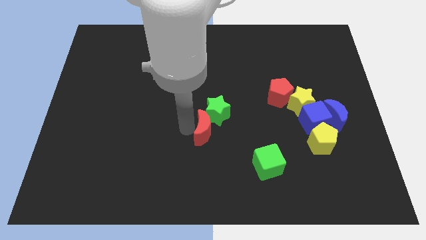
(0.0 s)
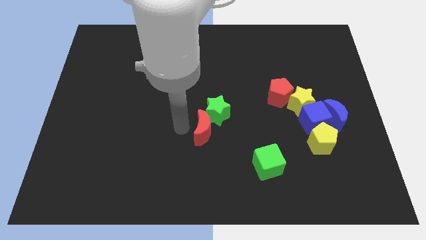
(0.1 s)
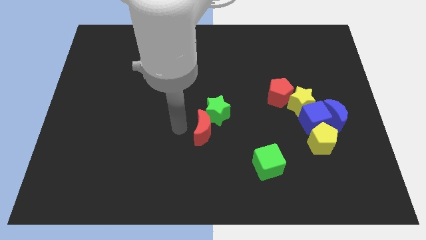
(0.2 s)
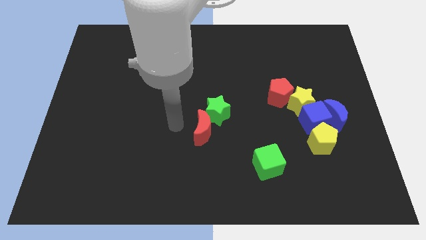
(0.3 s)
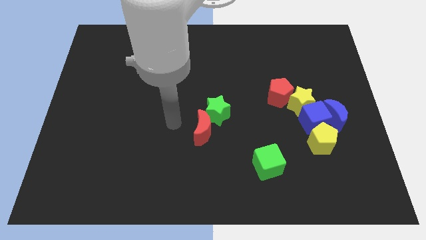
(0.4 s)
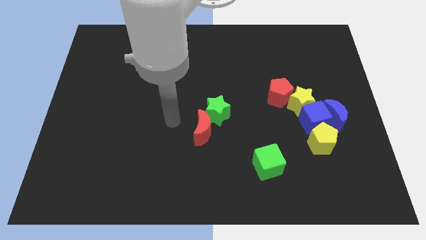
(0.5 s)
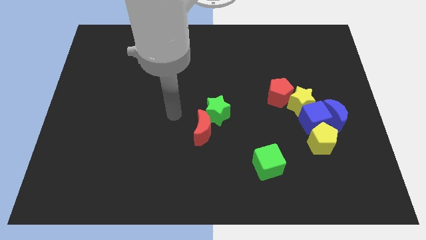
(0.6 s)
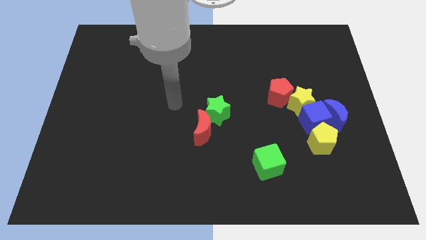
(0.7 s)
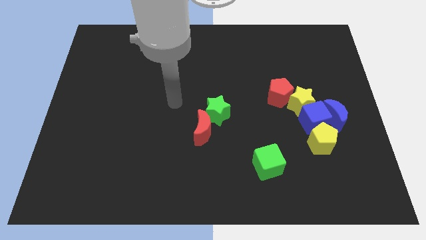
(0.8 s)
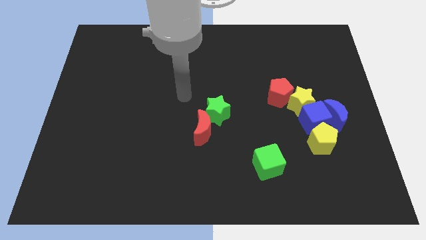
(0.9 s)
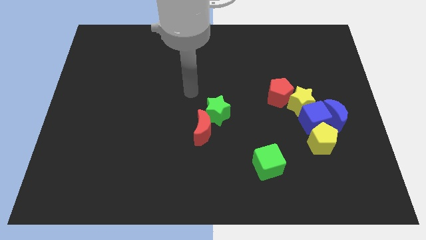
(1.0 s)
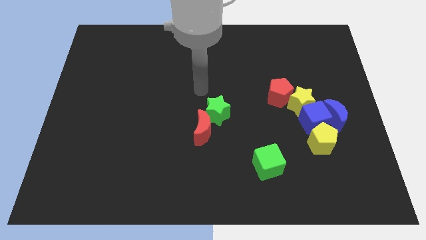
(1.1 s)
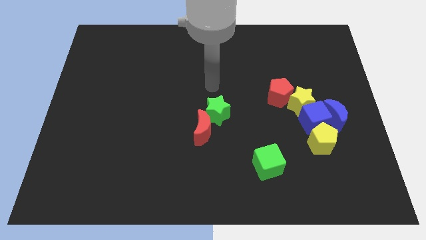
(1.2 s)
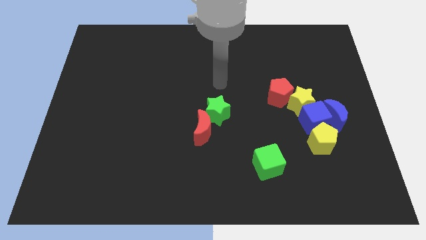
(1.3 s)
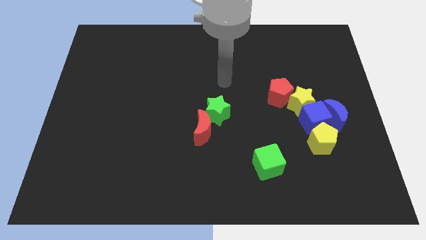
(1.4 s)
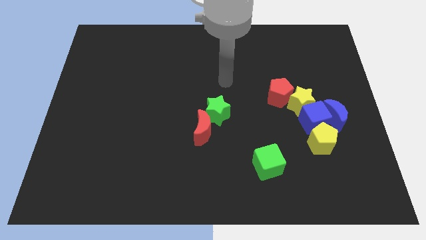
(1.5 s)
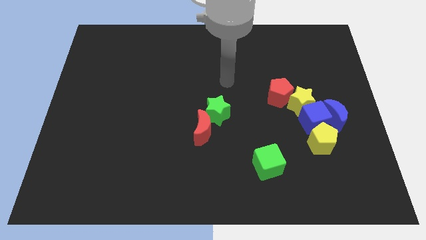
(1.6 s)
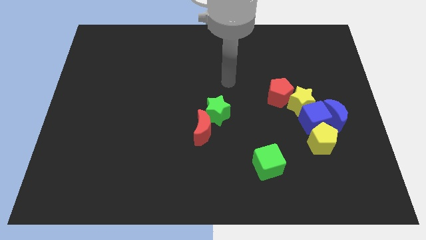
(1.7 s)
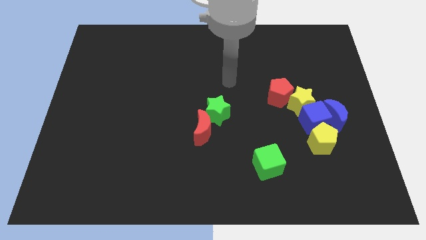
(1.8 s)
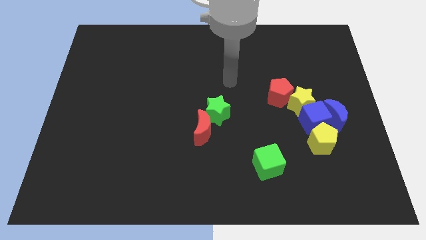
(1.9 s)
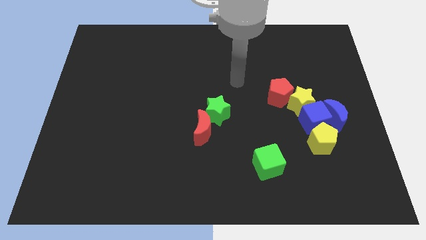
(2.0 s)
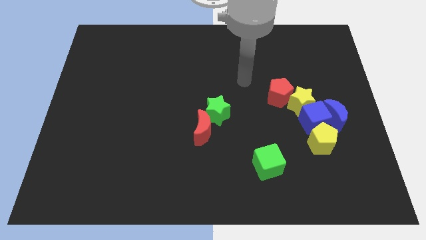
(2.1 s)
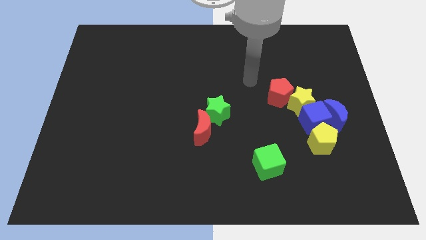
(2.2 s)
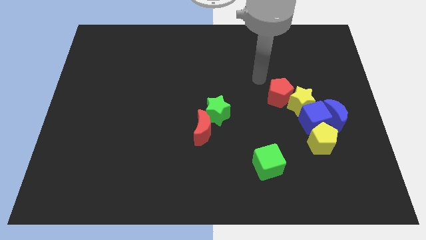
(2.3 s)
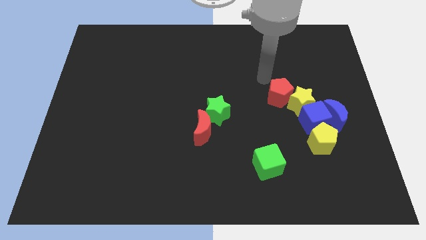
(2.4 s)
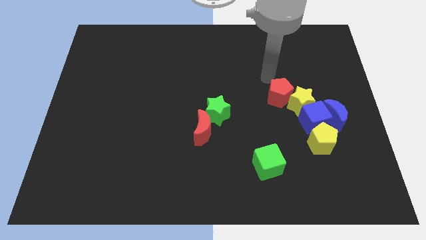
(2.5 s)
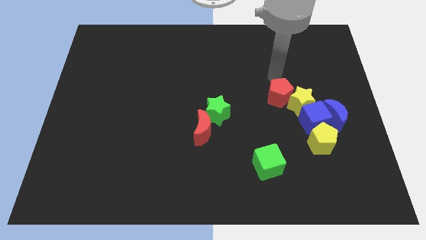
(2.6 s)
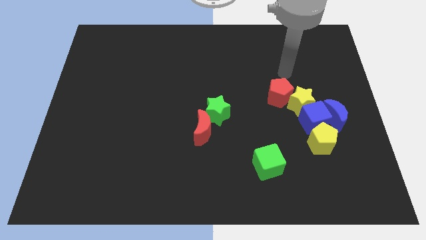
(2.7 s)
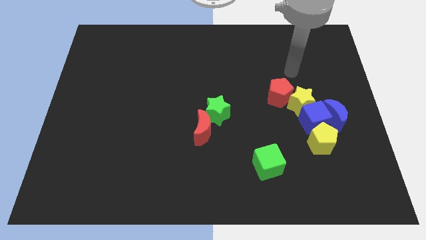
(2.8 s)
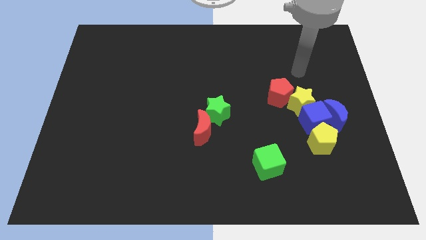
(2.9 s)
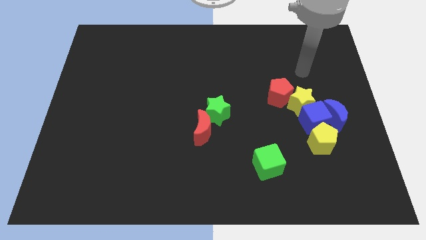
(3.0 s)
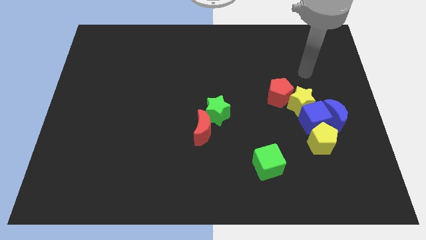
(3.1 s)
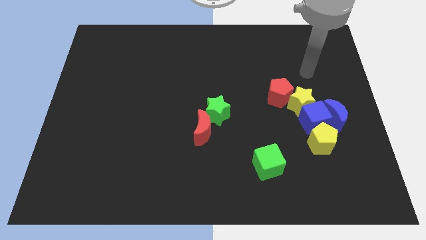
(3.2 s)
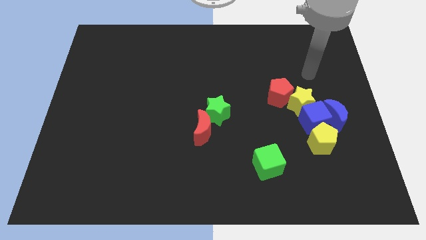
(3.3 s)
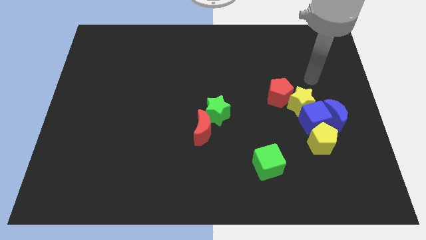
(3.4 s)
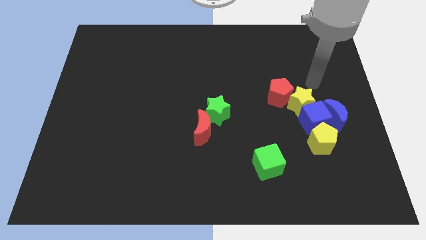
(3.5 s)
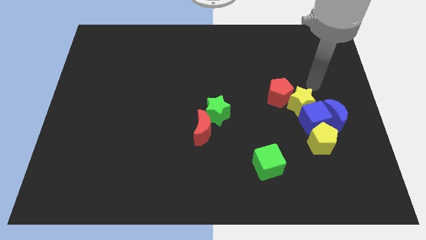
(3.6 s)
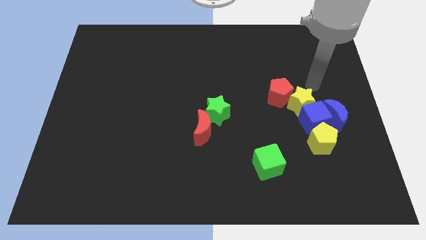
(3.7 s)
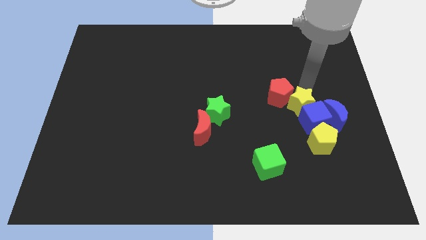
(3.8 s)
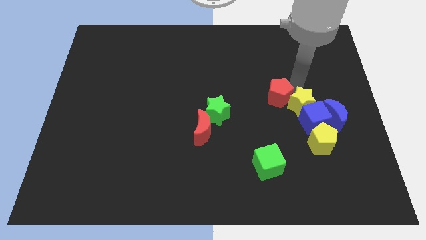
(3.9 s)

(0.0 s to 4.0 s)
point your arm above the yellow star

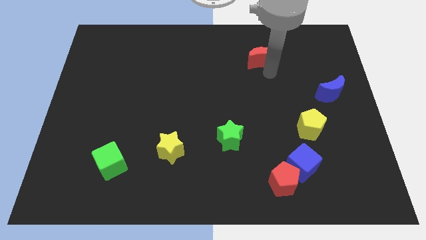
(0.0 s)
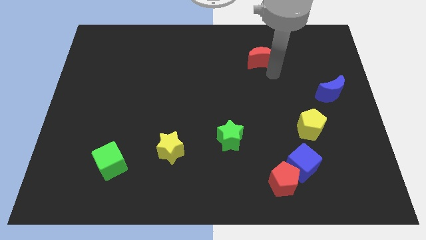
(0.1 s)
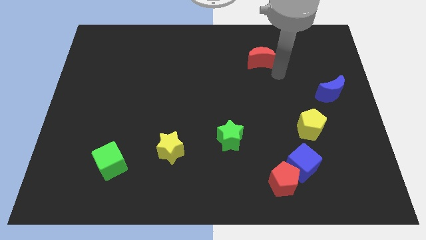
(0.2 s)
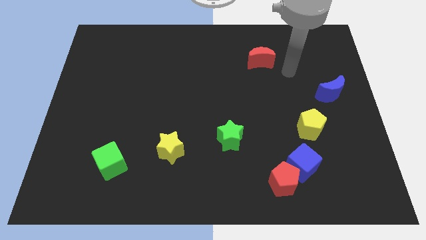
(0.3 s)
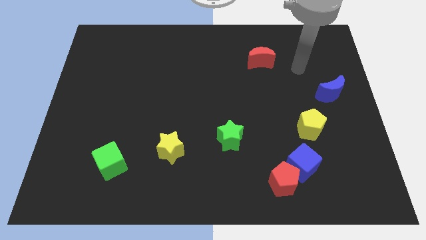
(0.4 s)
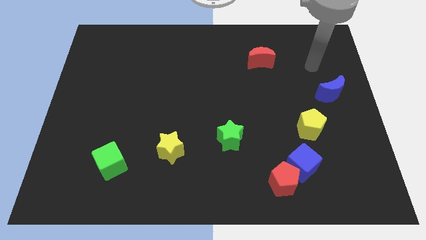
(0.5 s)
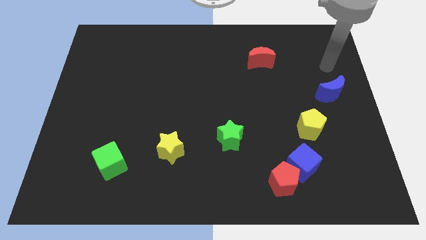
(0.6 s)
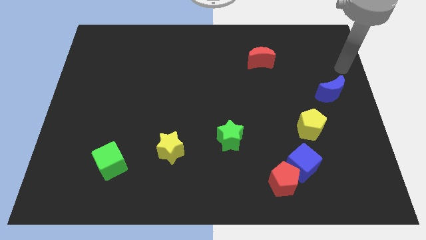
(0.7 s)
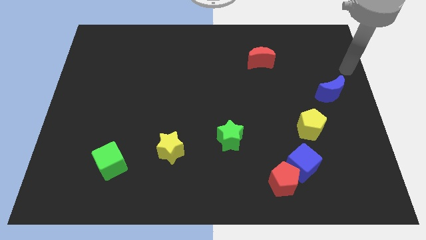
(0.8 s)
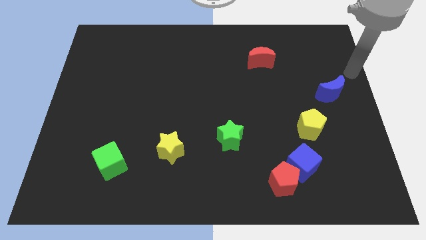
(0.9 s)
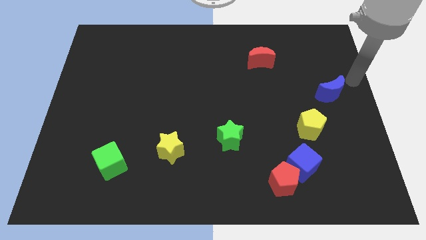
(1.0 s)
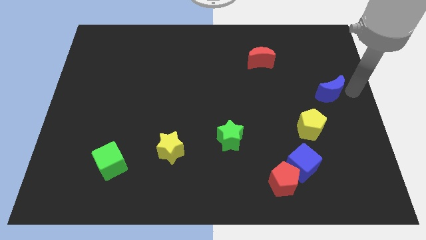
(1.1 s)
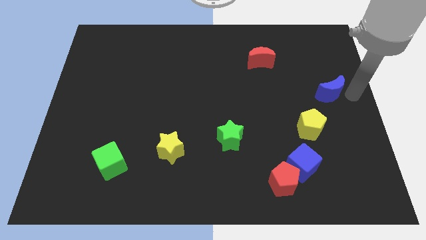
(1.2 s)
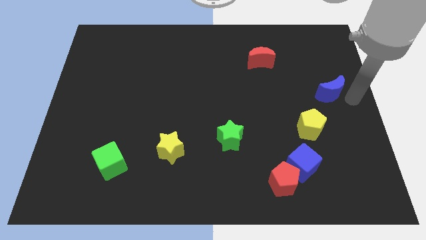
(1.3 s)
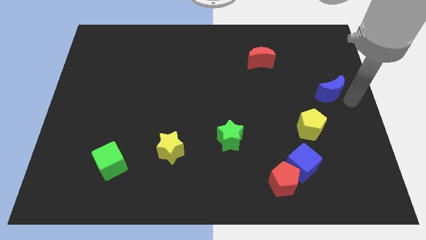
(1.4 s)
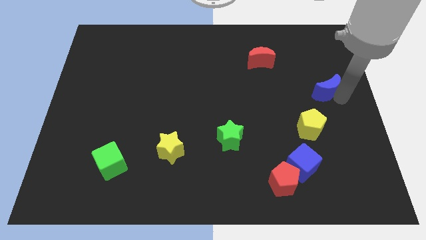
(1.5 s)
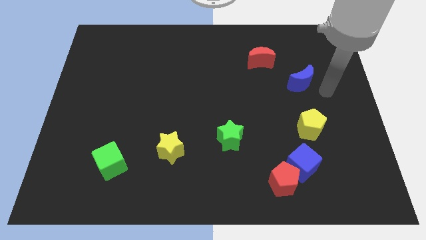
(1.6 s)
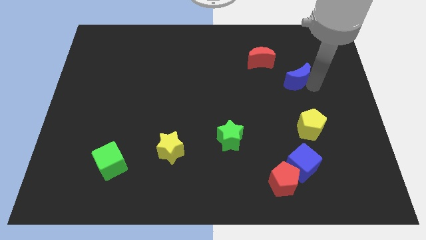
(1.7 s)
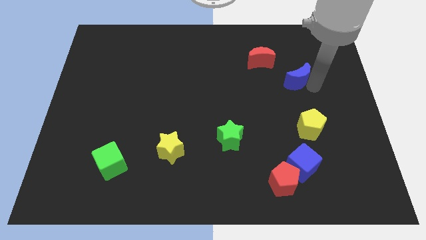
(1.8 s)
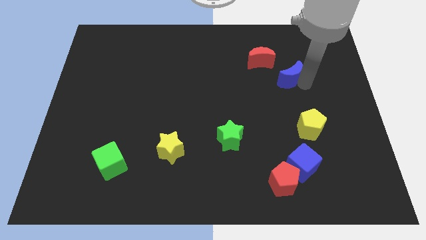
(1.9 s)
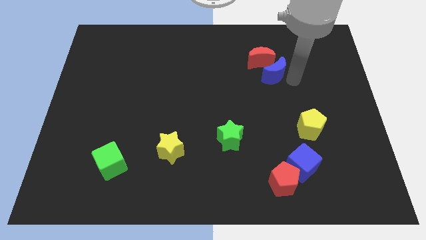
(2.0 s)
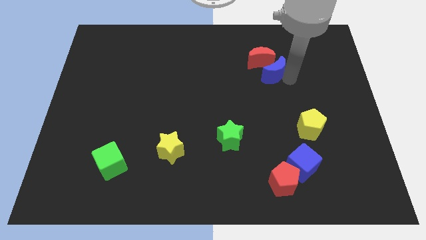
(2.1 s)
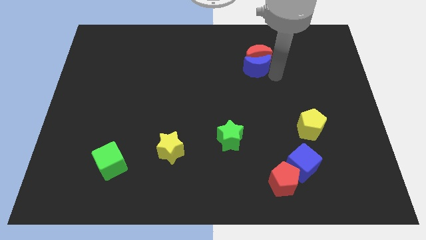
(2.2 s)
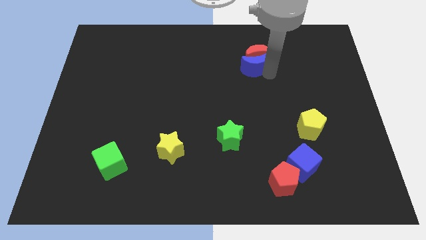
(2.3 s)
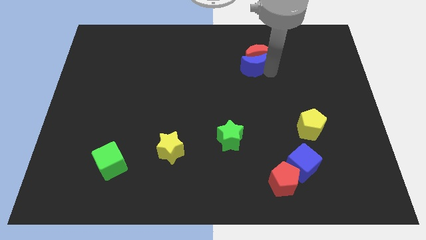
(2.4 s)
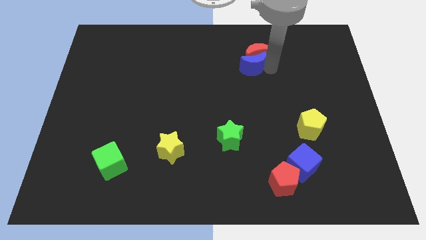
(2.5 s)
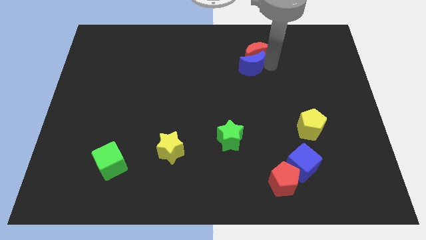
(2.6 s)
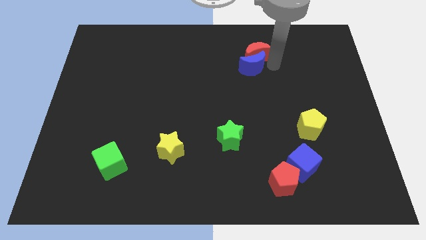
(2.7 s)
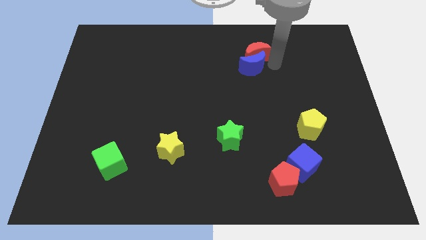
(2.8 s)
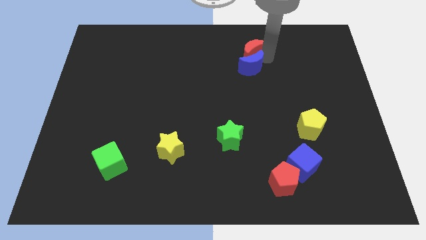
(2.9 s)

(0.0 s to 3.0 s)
push the blue moon into the red moon

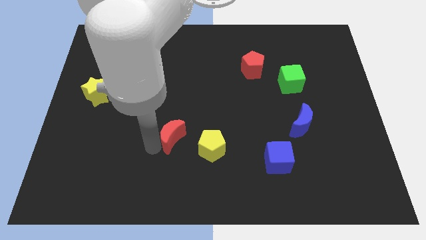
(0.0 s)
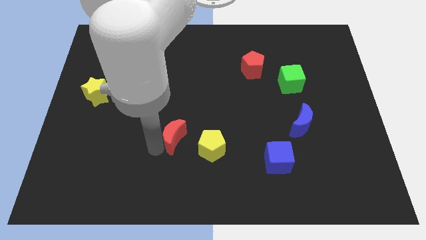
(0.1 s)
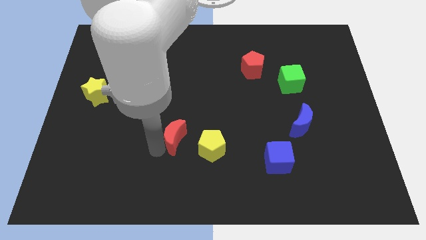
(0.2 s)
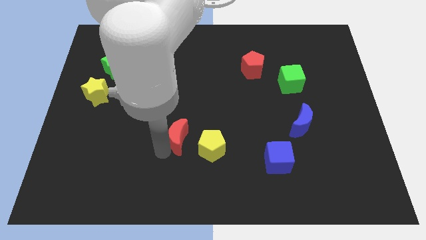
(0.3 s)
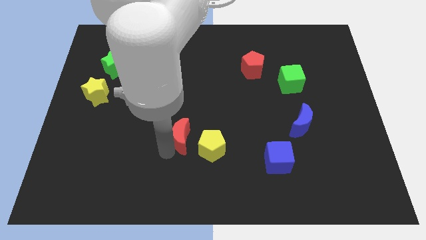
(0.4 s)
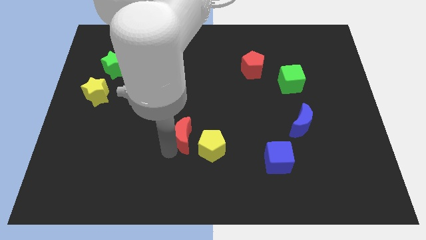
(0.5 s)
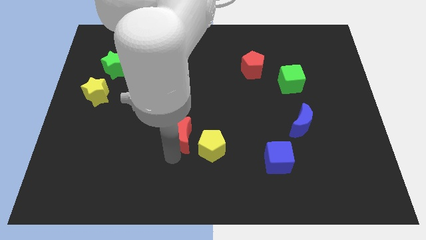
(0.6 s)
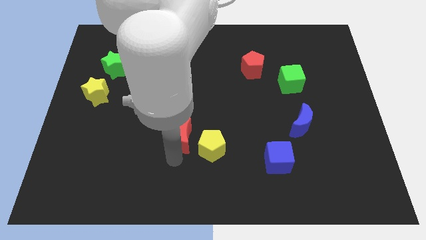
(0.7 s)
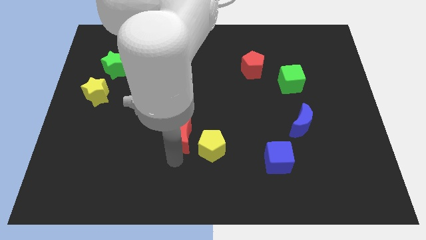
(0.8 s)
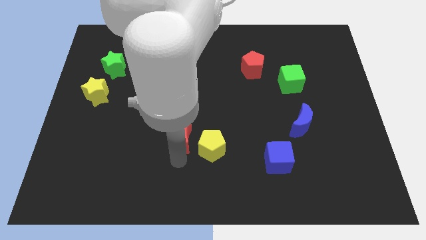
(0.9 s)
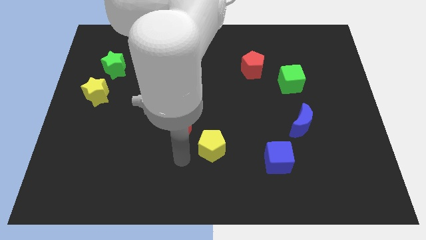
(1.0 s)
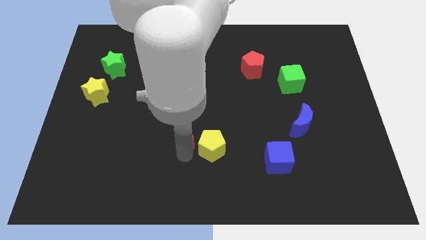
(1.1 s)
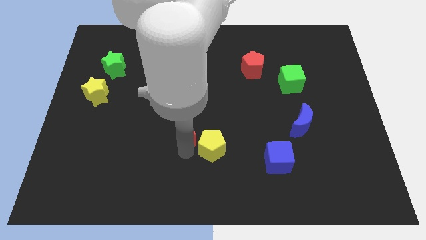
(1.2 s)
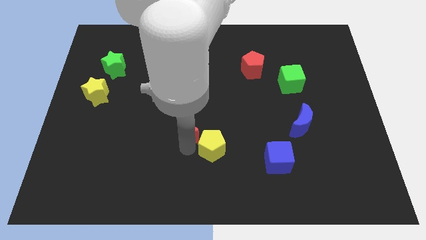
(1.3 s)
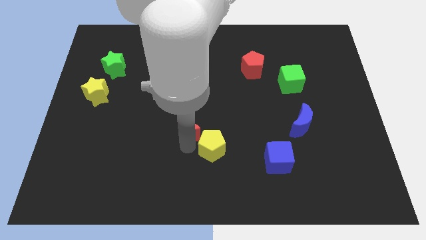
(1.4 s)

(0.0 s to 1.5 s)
place red moon close to yellow pentagon

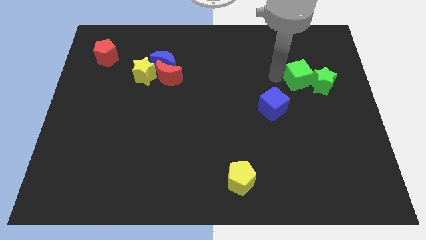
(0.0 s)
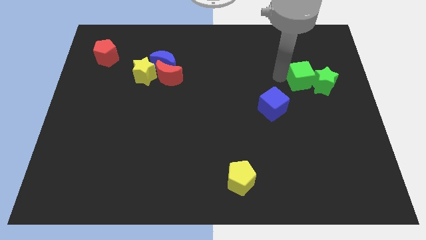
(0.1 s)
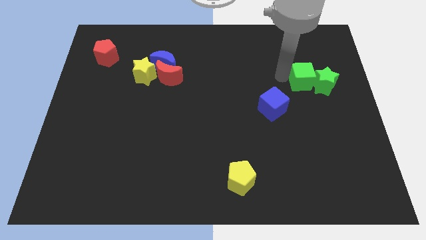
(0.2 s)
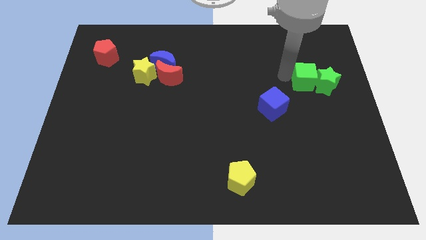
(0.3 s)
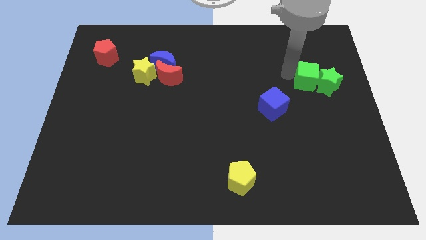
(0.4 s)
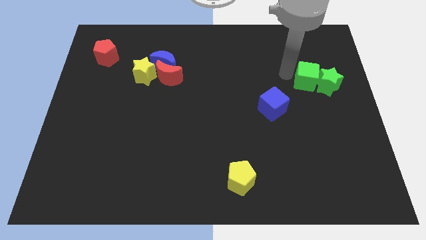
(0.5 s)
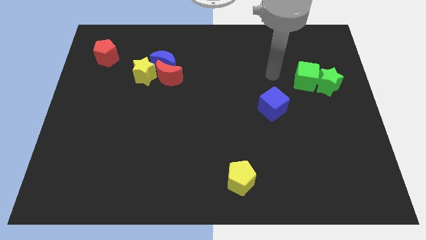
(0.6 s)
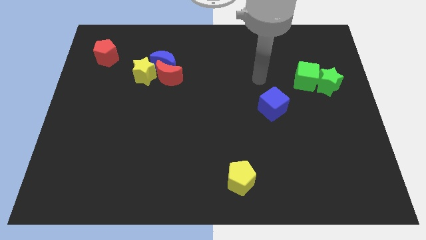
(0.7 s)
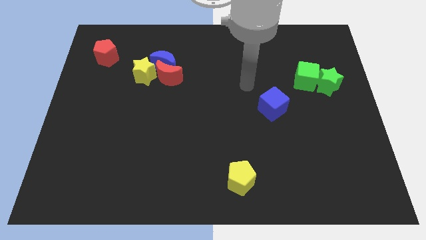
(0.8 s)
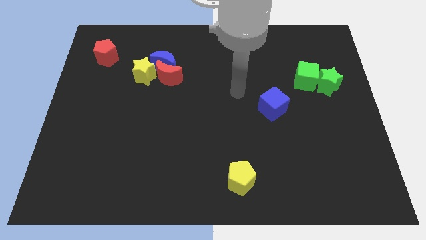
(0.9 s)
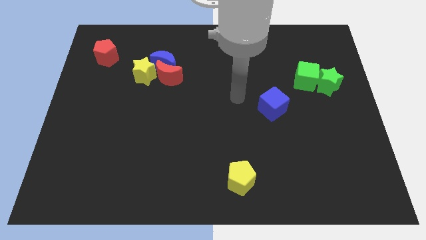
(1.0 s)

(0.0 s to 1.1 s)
slightly push the green cube and green star
